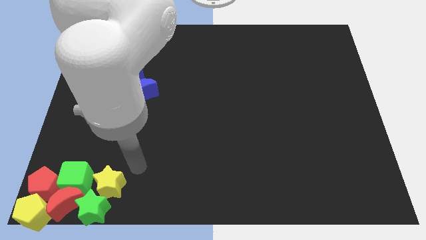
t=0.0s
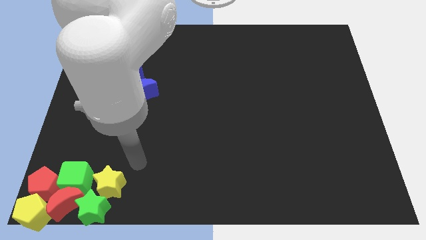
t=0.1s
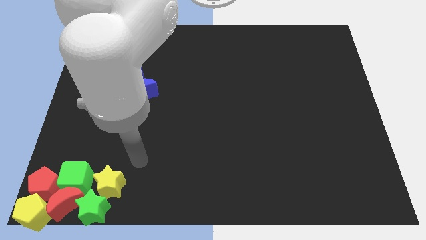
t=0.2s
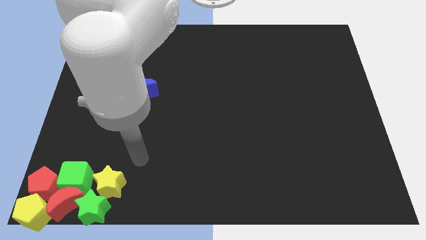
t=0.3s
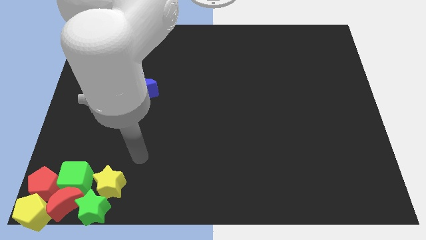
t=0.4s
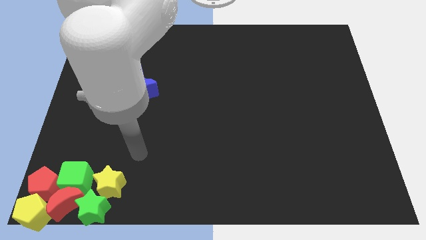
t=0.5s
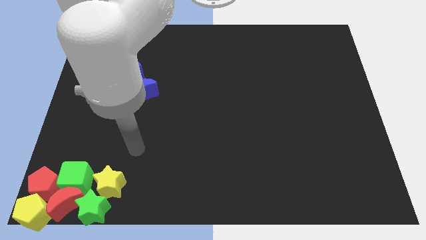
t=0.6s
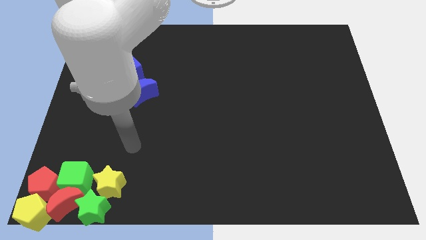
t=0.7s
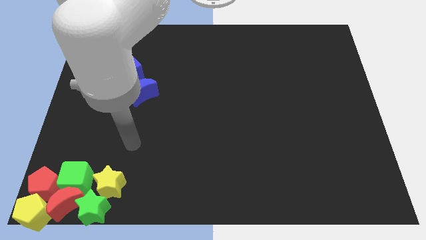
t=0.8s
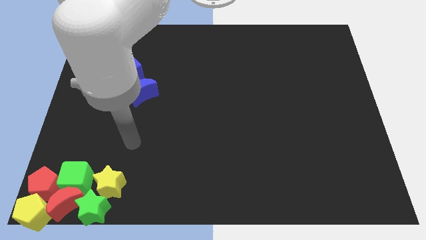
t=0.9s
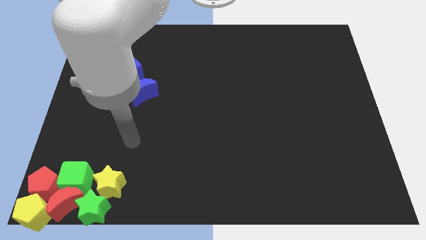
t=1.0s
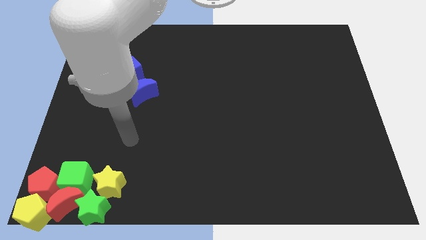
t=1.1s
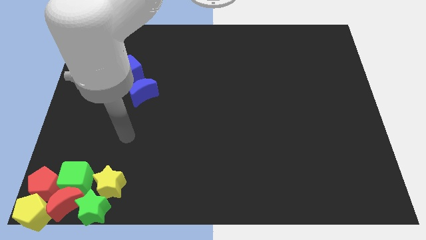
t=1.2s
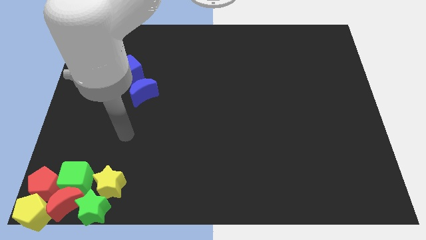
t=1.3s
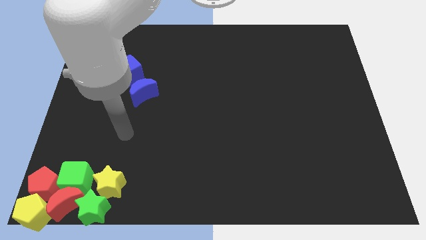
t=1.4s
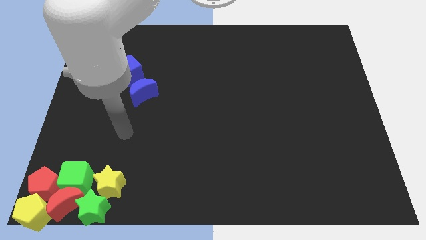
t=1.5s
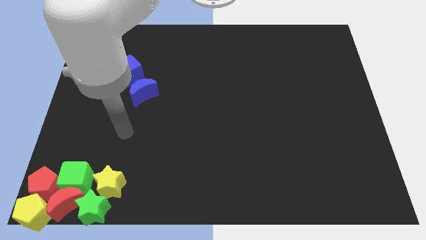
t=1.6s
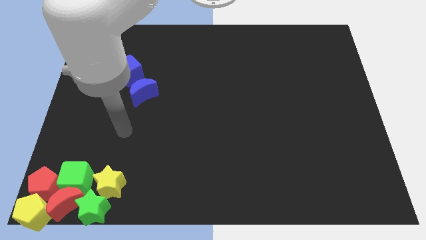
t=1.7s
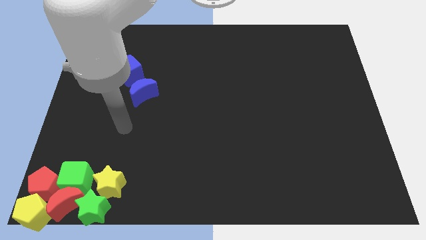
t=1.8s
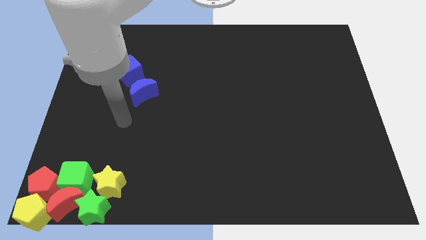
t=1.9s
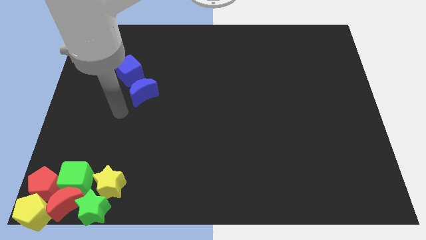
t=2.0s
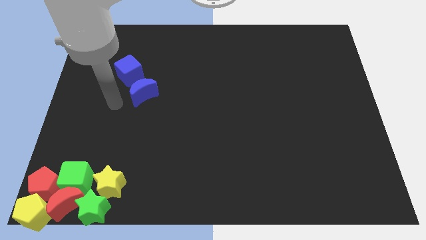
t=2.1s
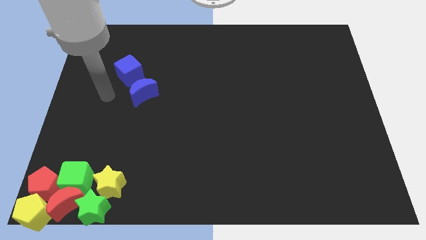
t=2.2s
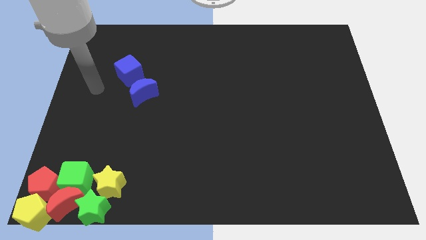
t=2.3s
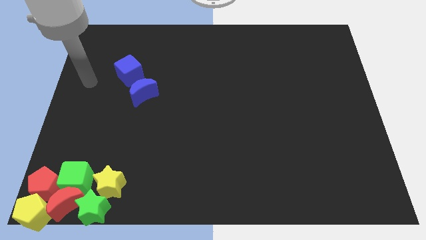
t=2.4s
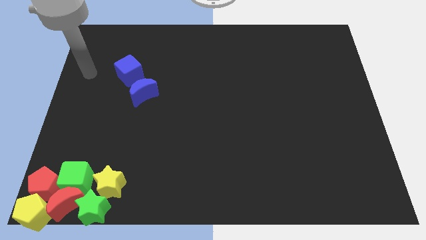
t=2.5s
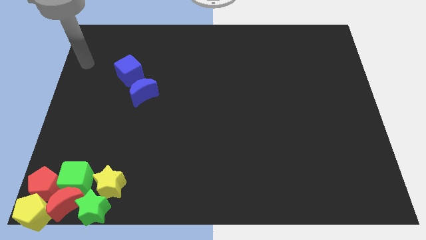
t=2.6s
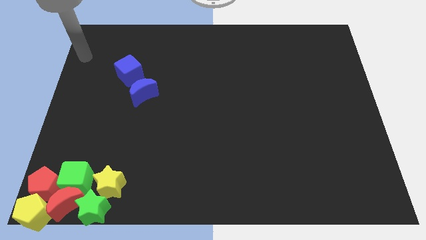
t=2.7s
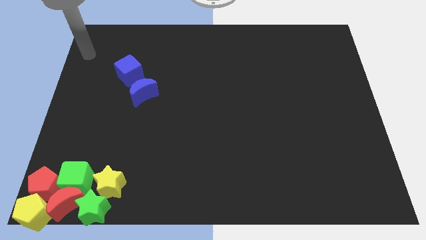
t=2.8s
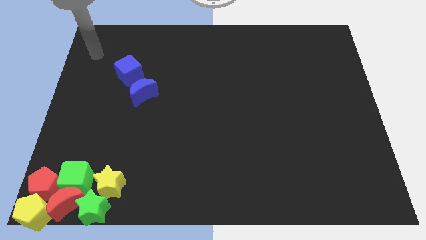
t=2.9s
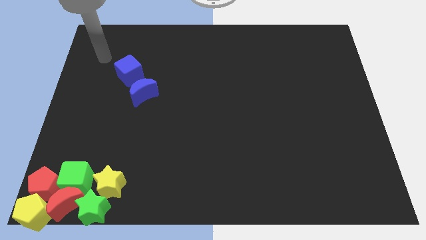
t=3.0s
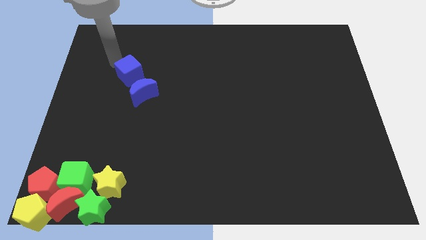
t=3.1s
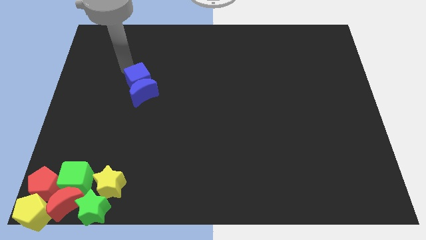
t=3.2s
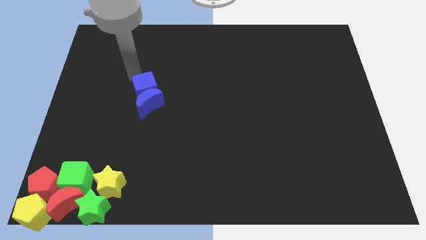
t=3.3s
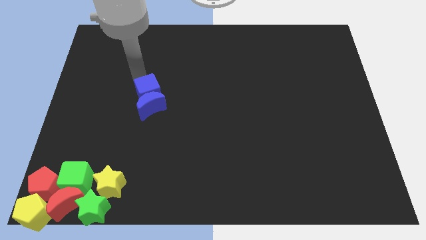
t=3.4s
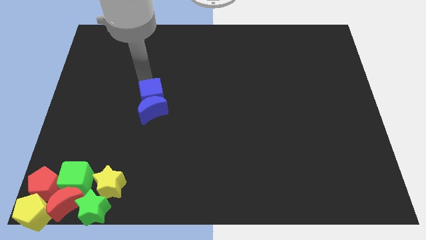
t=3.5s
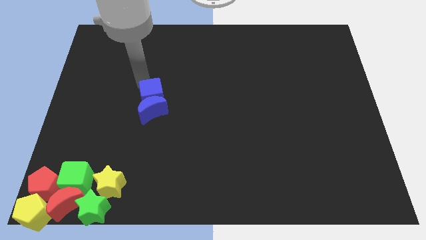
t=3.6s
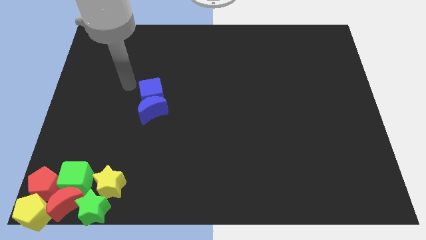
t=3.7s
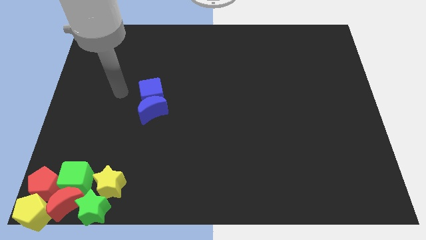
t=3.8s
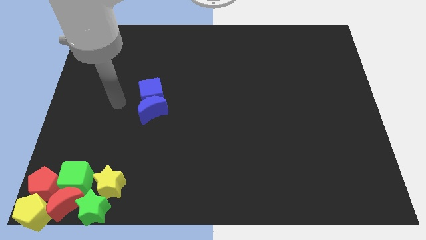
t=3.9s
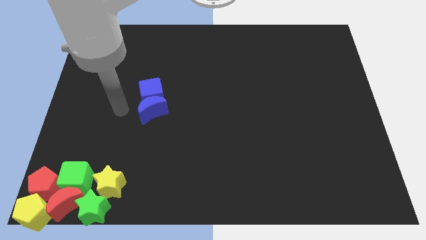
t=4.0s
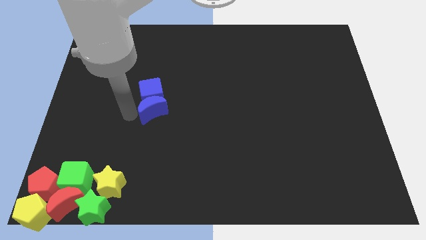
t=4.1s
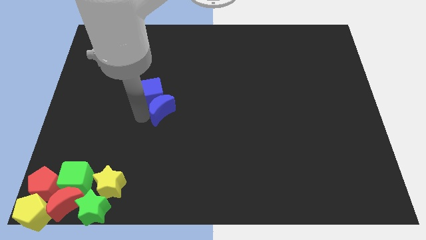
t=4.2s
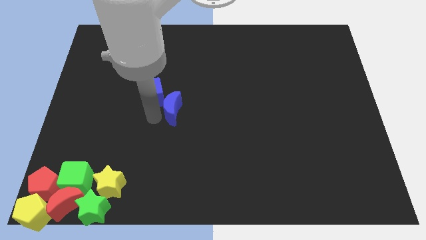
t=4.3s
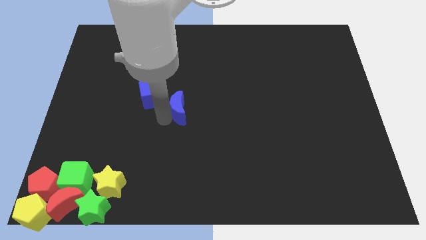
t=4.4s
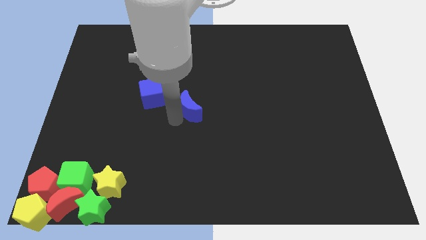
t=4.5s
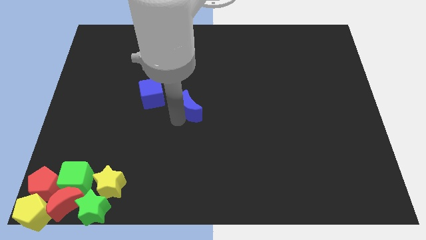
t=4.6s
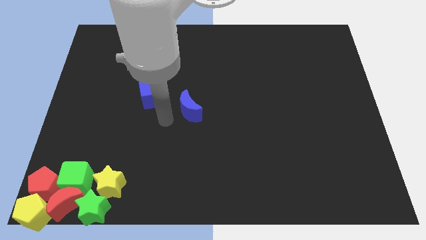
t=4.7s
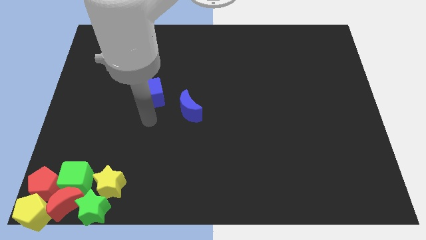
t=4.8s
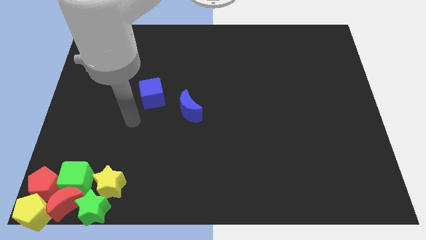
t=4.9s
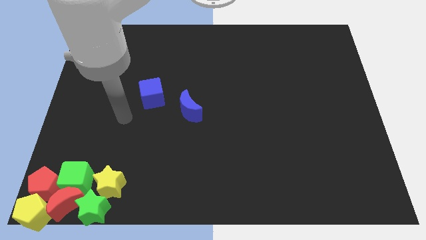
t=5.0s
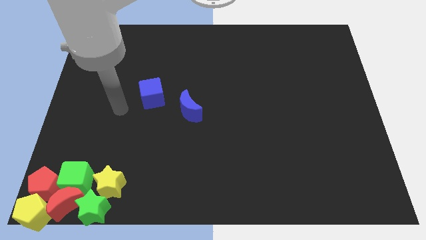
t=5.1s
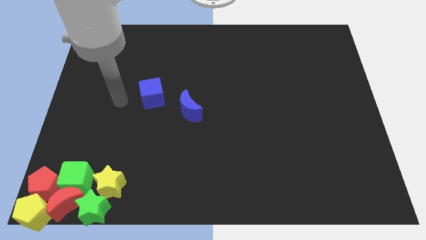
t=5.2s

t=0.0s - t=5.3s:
separate the blue crescent from the blue cube

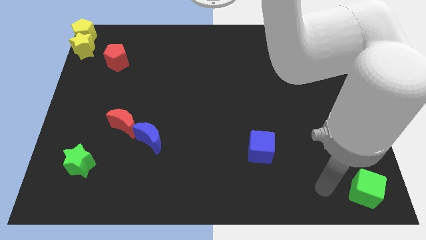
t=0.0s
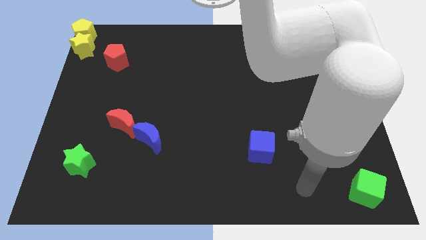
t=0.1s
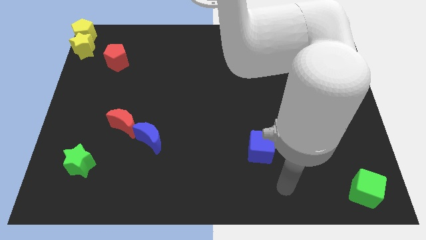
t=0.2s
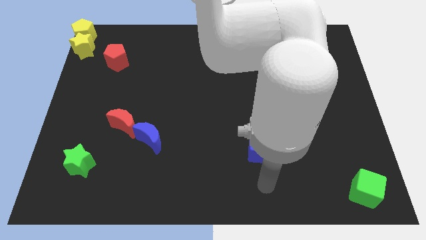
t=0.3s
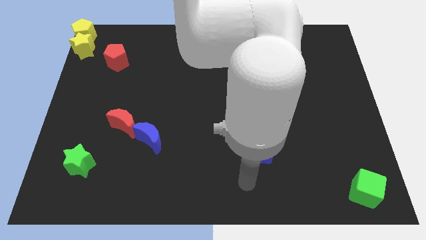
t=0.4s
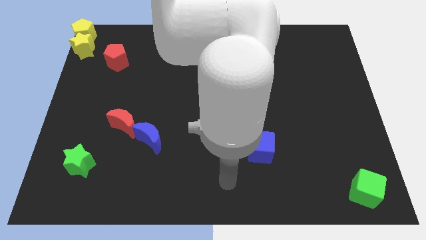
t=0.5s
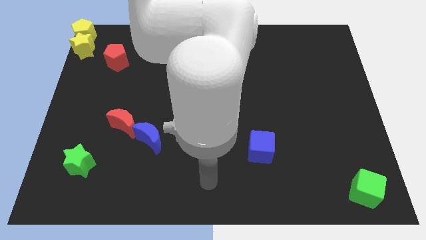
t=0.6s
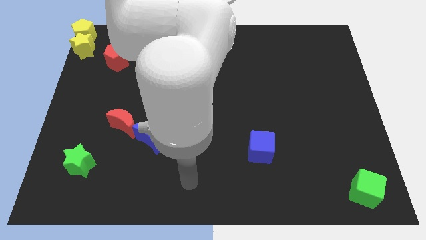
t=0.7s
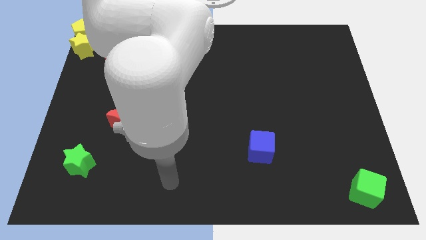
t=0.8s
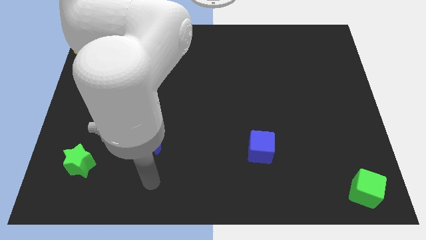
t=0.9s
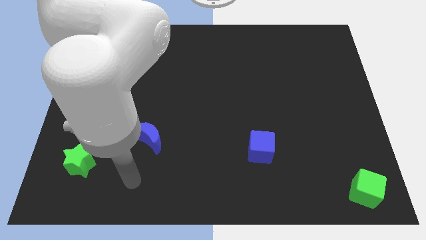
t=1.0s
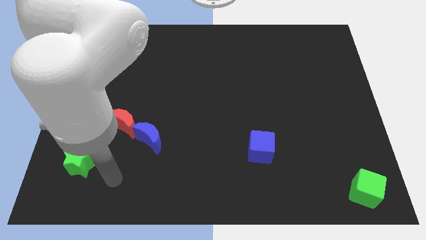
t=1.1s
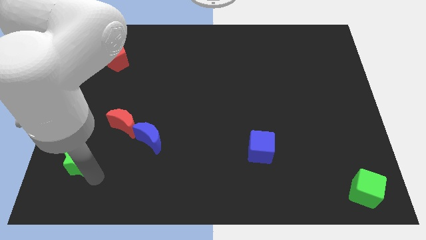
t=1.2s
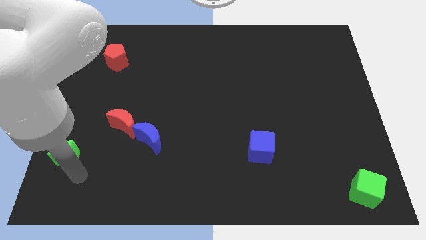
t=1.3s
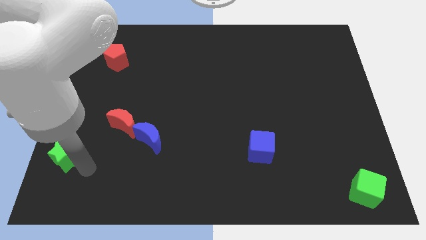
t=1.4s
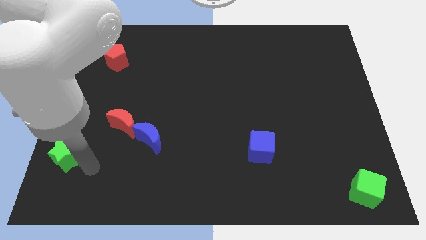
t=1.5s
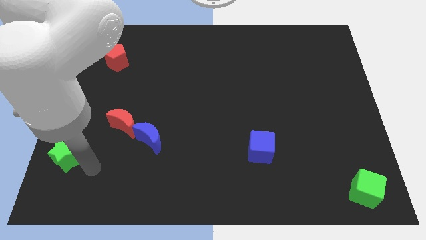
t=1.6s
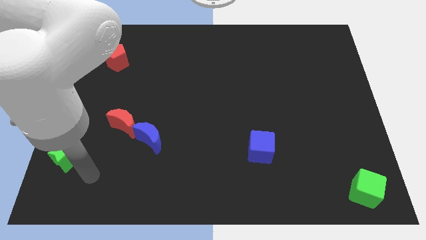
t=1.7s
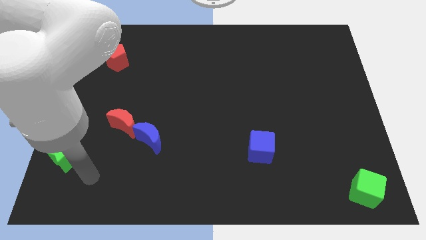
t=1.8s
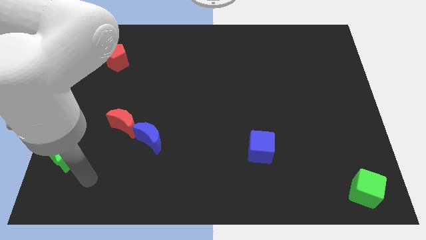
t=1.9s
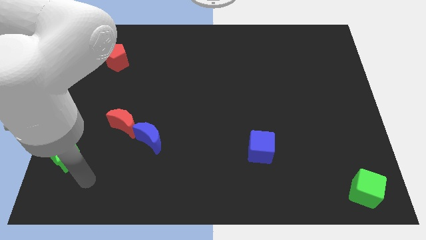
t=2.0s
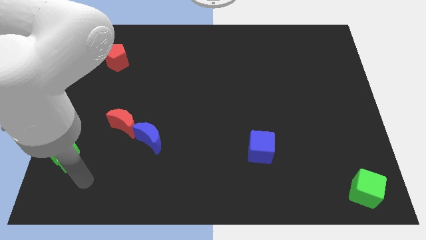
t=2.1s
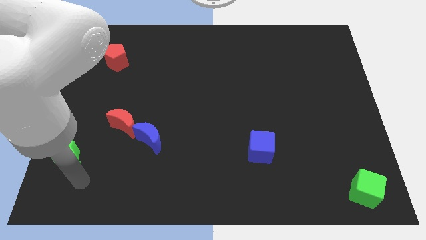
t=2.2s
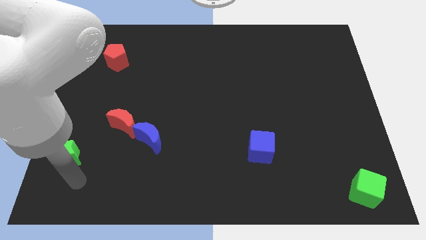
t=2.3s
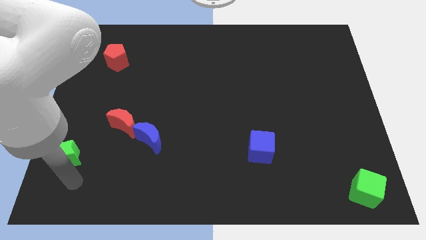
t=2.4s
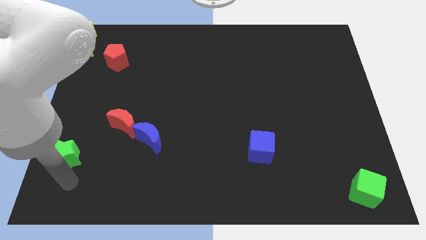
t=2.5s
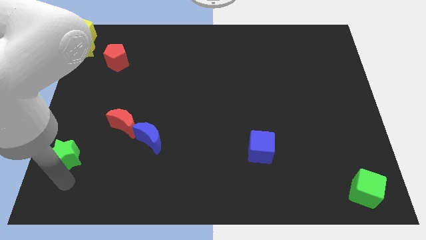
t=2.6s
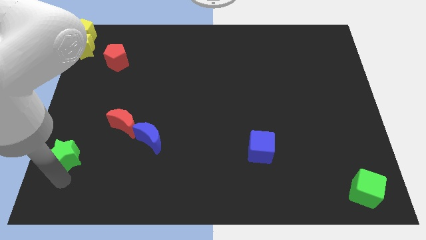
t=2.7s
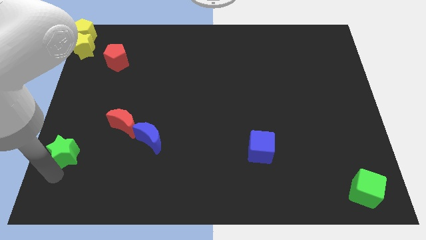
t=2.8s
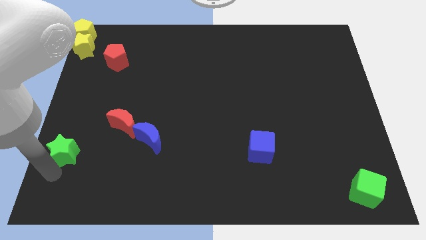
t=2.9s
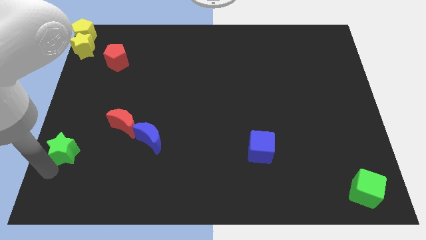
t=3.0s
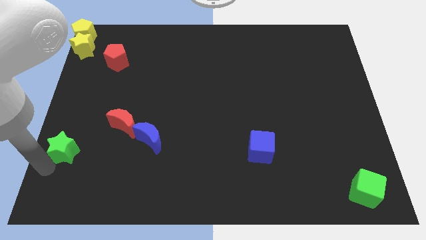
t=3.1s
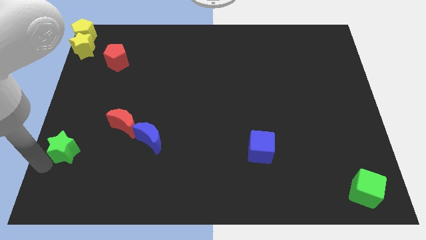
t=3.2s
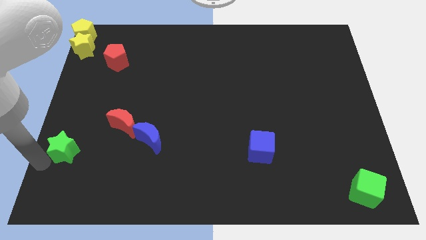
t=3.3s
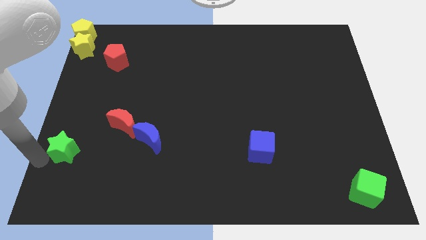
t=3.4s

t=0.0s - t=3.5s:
move the green star slightly to the left side of the board
